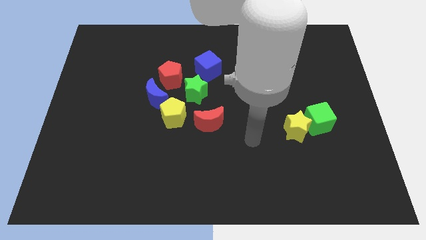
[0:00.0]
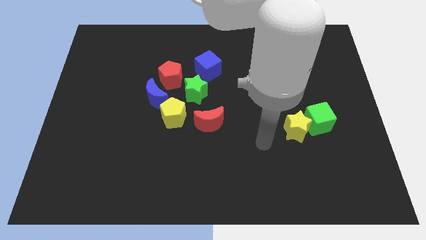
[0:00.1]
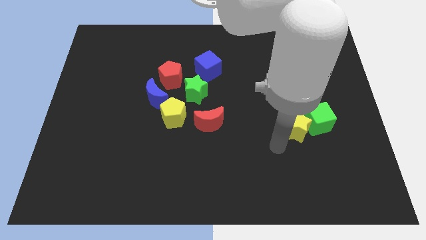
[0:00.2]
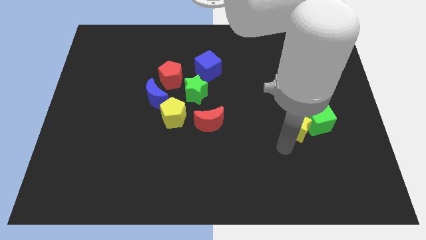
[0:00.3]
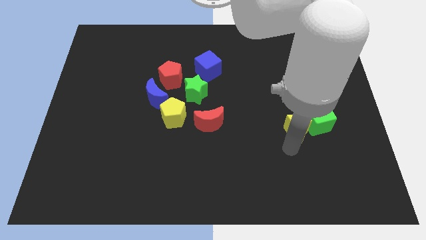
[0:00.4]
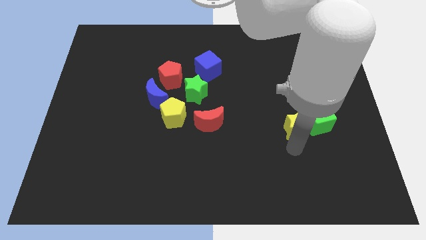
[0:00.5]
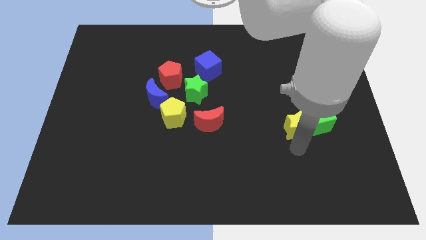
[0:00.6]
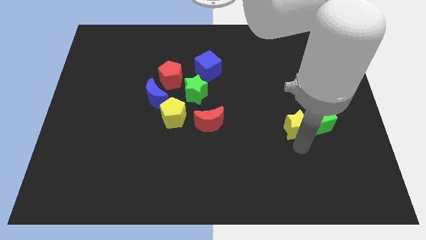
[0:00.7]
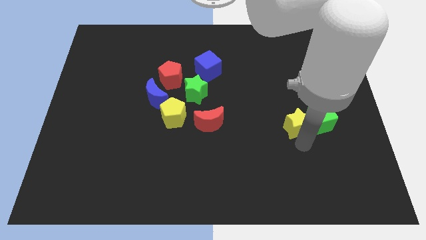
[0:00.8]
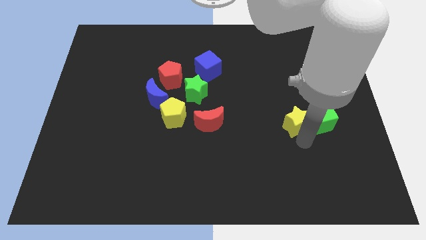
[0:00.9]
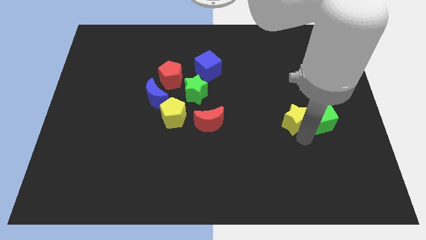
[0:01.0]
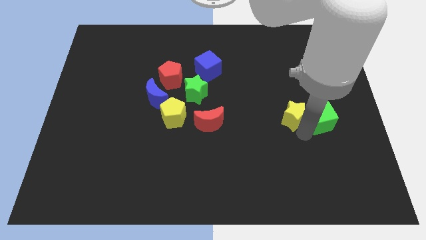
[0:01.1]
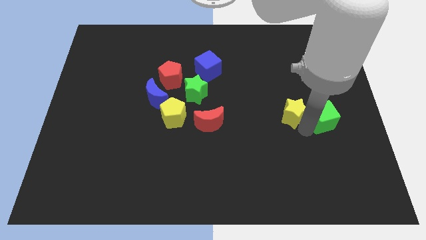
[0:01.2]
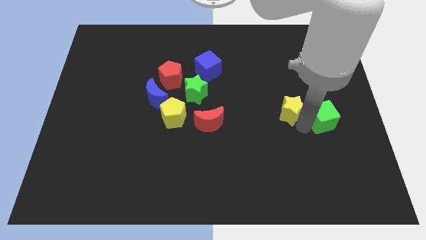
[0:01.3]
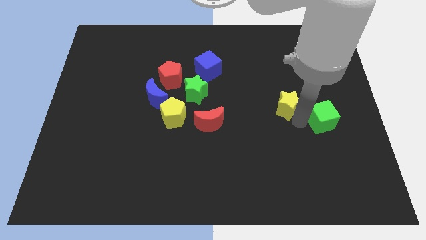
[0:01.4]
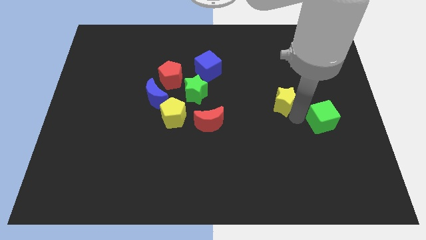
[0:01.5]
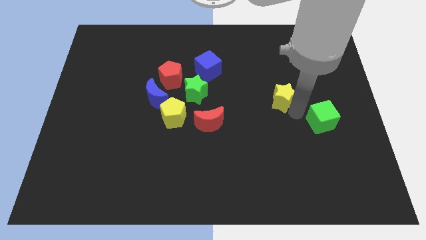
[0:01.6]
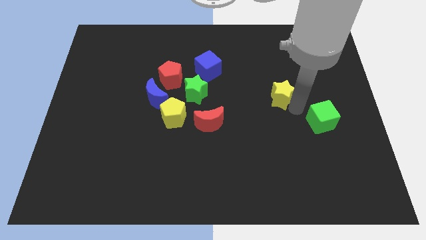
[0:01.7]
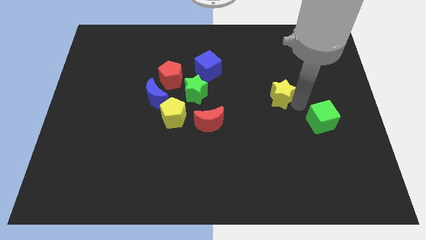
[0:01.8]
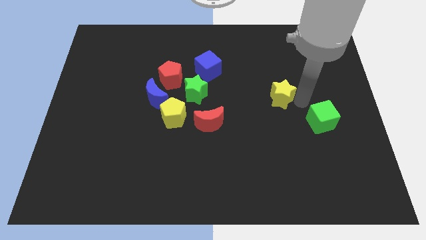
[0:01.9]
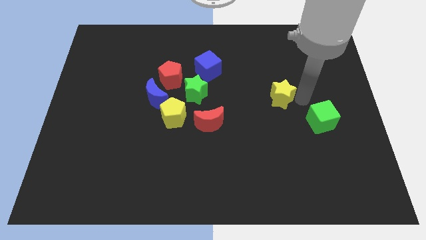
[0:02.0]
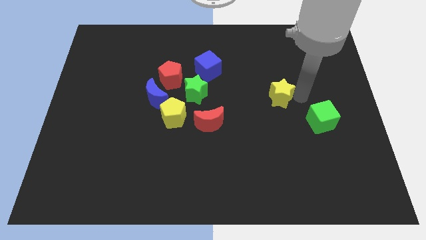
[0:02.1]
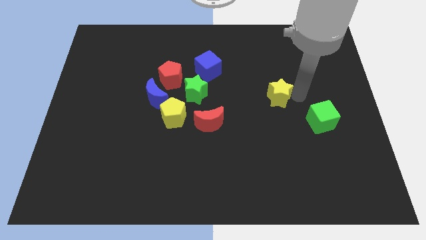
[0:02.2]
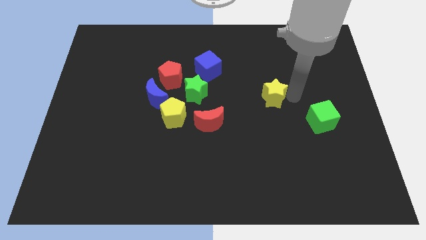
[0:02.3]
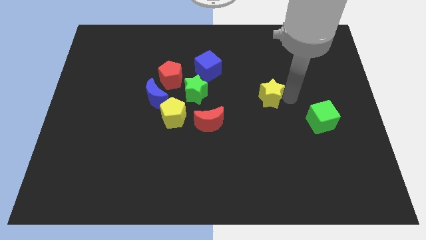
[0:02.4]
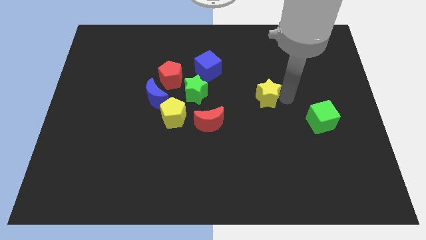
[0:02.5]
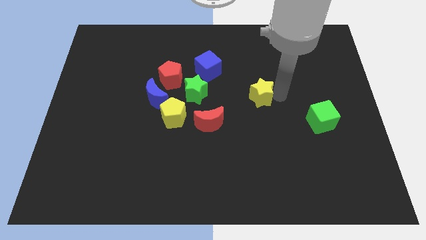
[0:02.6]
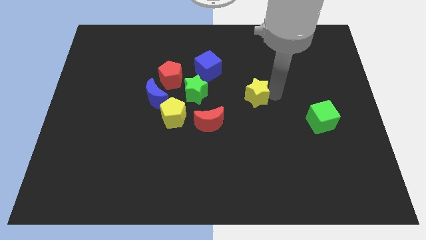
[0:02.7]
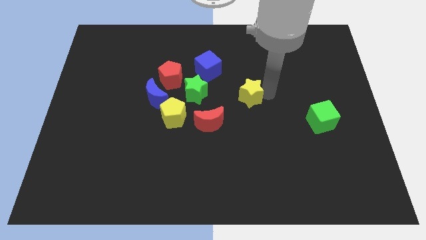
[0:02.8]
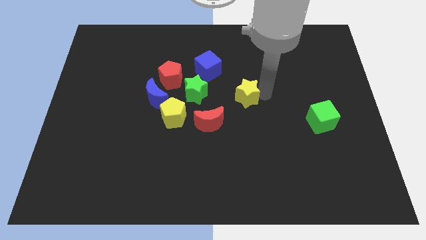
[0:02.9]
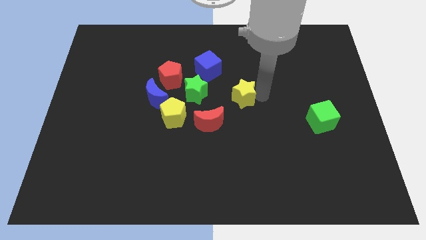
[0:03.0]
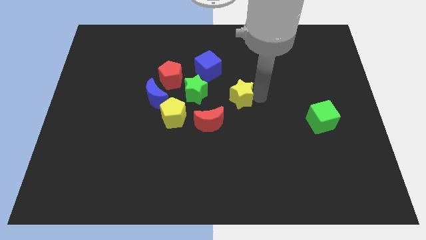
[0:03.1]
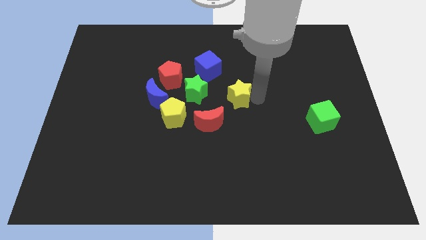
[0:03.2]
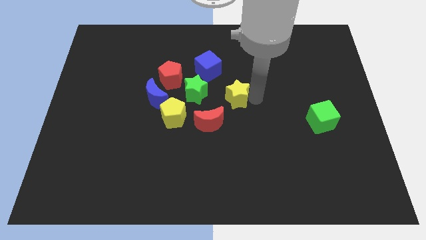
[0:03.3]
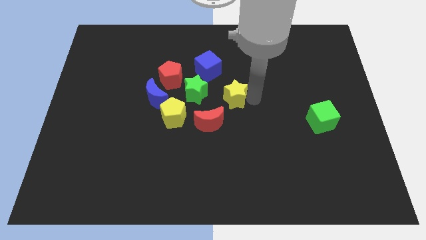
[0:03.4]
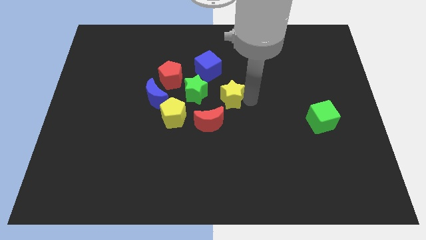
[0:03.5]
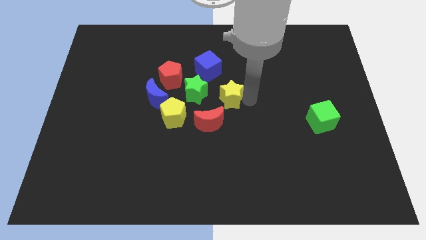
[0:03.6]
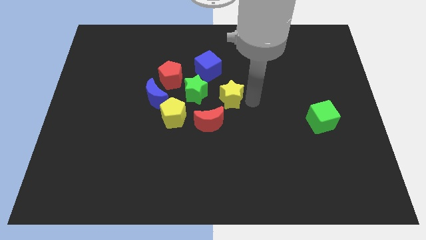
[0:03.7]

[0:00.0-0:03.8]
move the yellow star to the top right to the red crescent

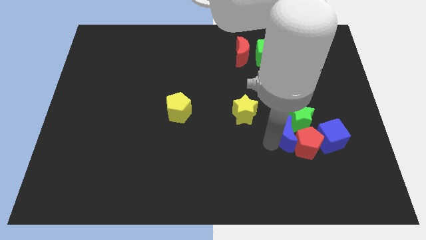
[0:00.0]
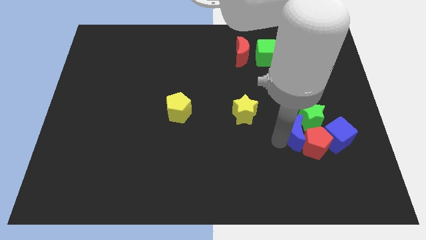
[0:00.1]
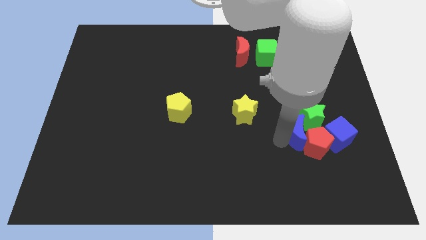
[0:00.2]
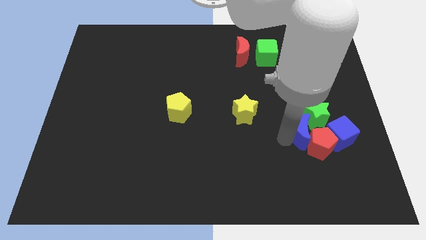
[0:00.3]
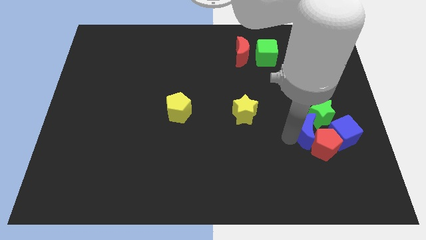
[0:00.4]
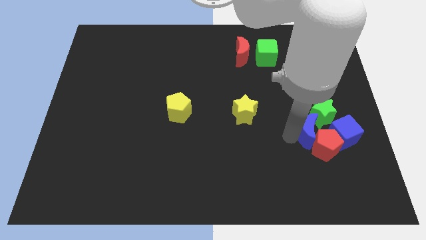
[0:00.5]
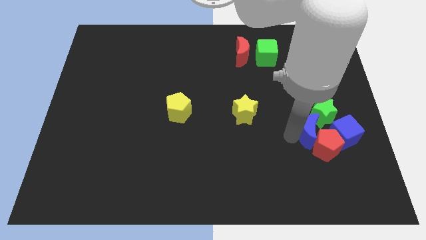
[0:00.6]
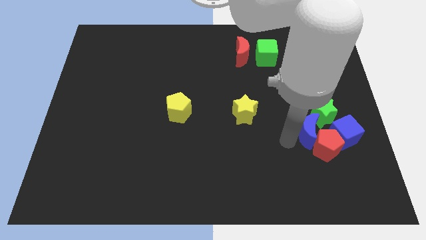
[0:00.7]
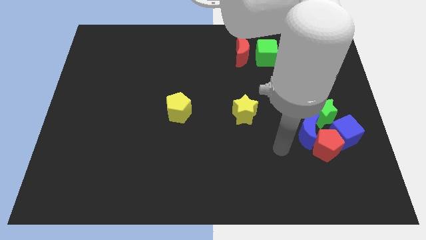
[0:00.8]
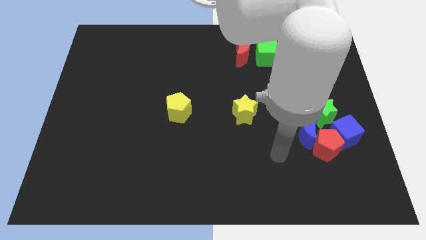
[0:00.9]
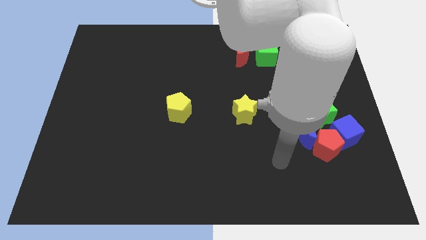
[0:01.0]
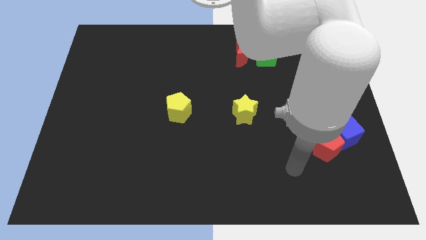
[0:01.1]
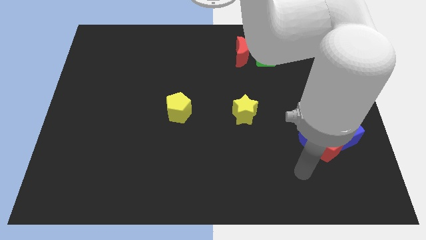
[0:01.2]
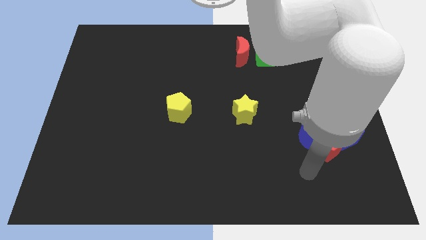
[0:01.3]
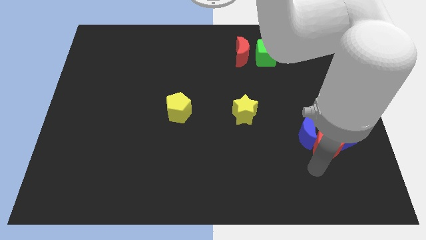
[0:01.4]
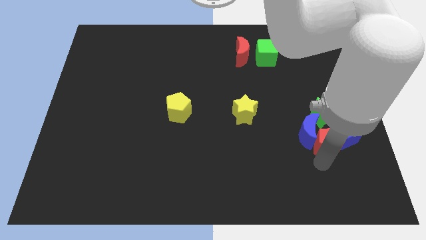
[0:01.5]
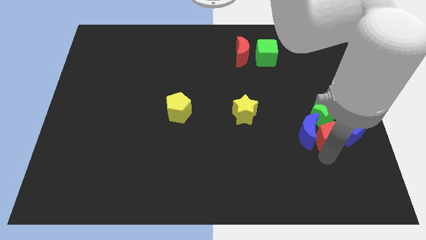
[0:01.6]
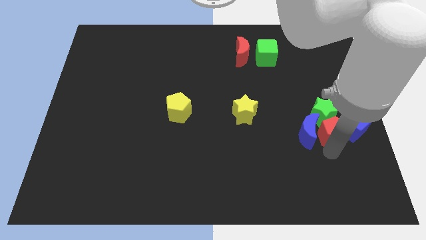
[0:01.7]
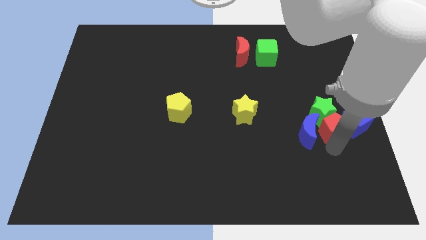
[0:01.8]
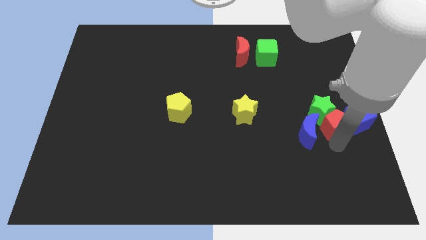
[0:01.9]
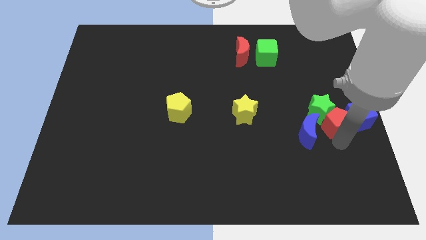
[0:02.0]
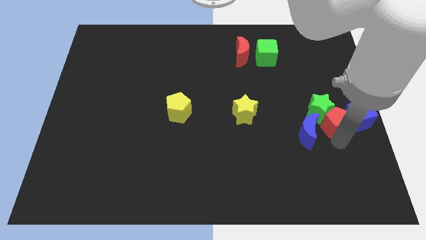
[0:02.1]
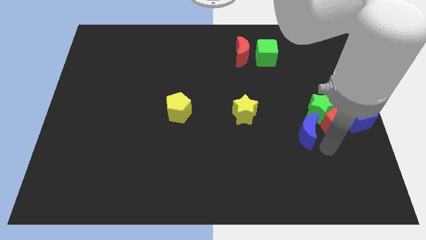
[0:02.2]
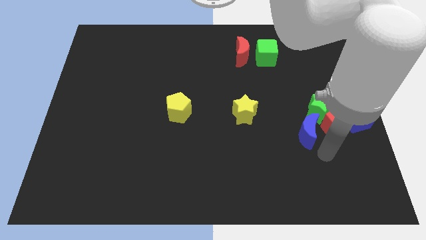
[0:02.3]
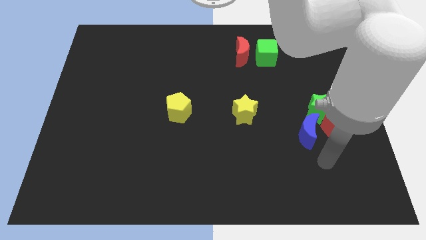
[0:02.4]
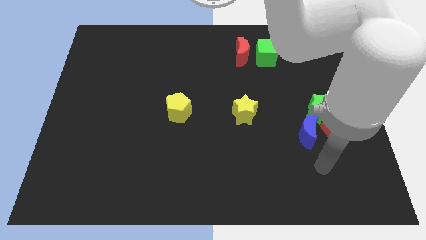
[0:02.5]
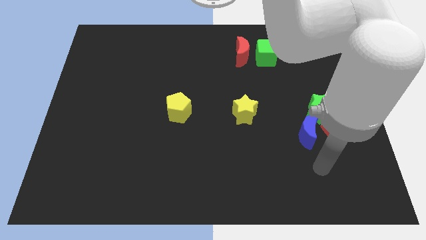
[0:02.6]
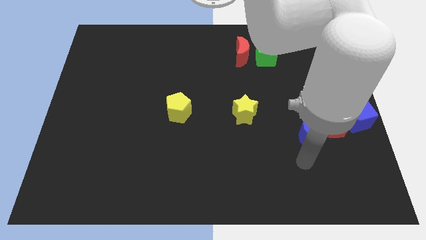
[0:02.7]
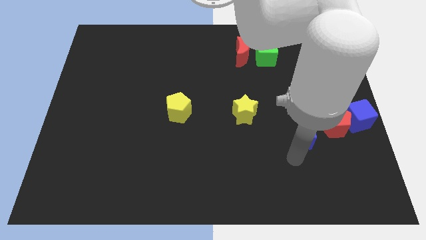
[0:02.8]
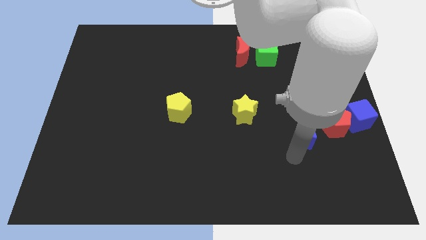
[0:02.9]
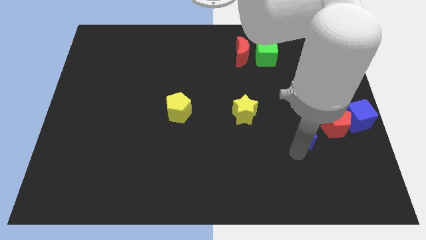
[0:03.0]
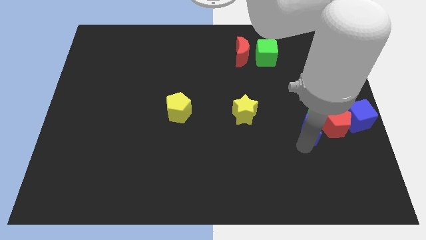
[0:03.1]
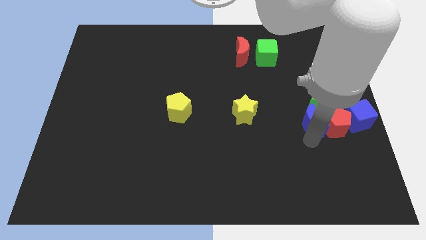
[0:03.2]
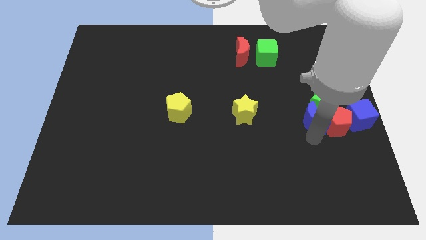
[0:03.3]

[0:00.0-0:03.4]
move blue blocks red pentagon and green star at center right of the board

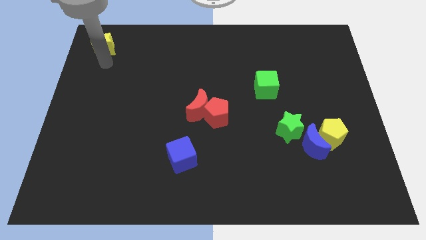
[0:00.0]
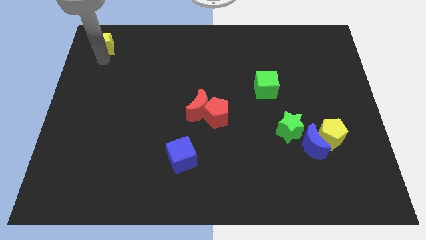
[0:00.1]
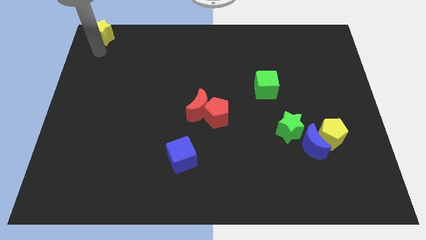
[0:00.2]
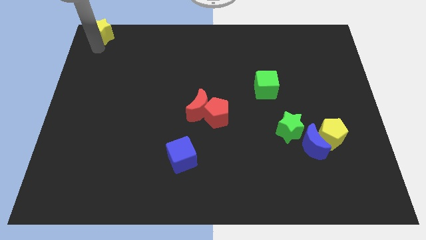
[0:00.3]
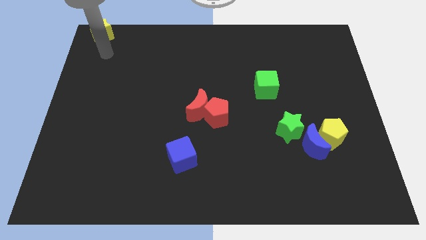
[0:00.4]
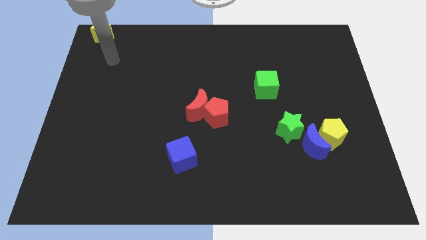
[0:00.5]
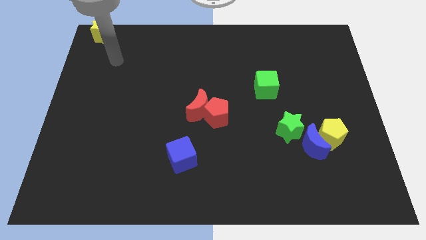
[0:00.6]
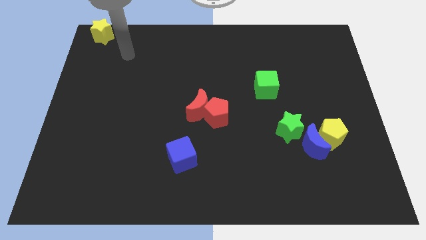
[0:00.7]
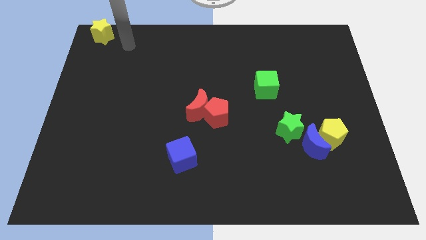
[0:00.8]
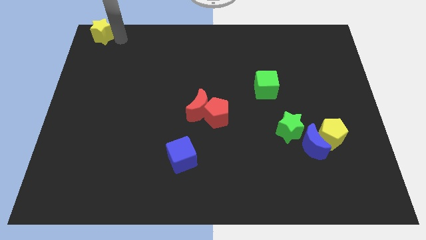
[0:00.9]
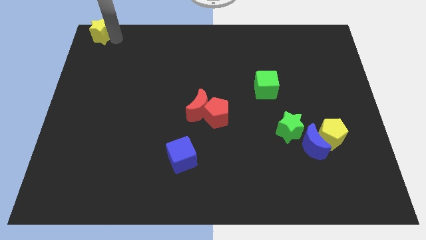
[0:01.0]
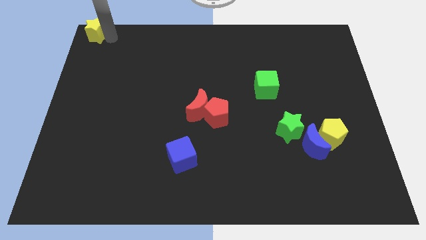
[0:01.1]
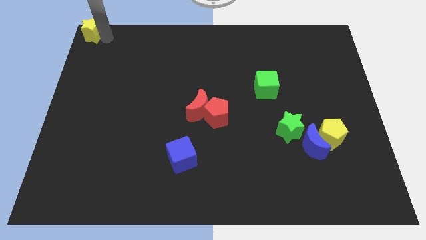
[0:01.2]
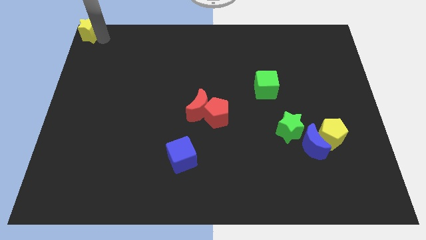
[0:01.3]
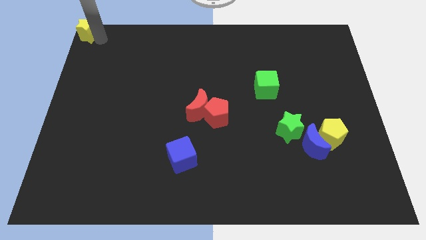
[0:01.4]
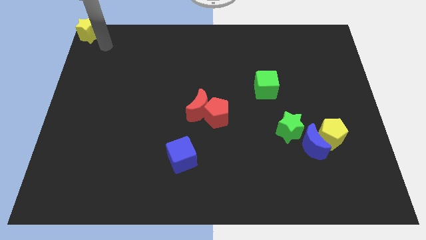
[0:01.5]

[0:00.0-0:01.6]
push the yellow star to the left corner of the board
